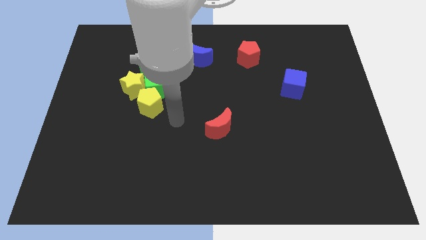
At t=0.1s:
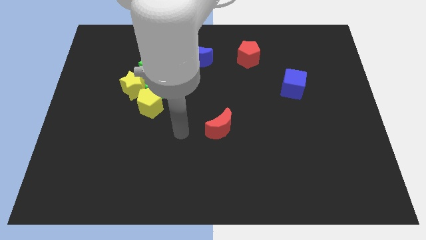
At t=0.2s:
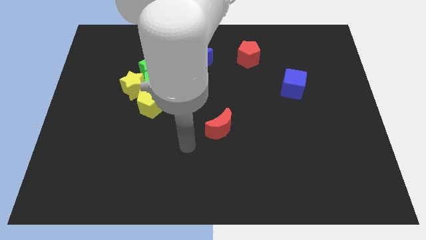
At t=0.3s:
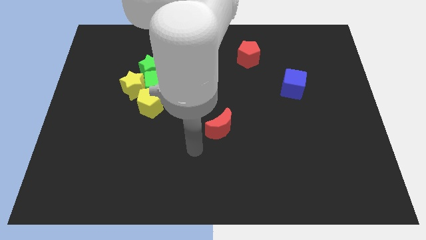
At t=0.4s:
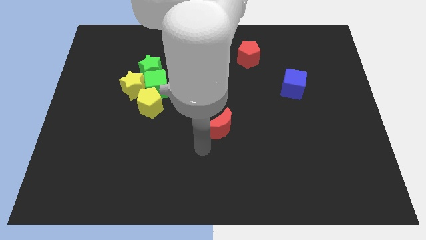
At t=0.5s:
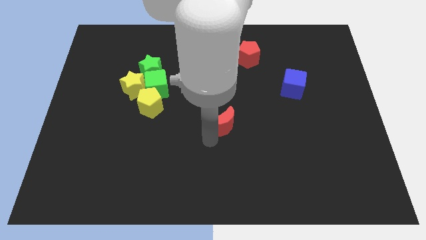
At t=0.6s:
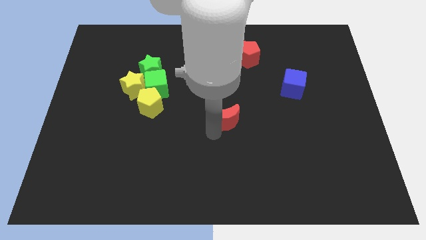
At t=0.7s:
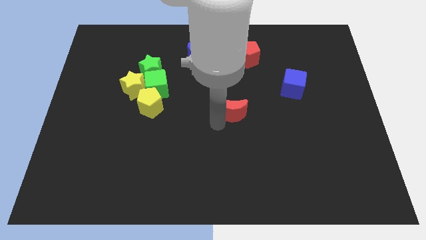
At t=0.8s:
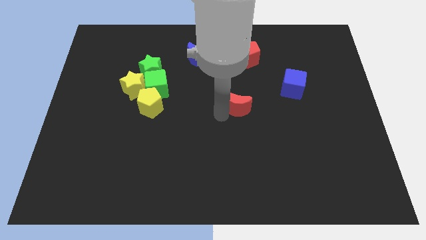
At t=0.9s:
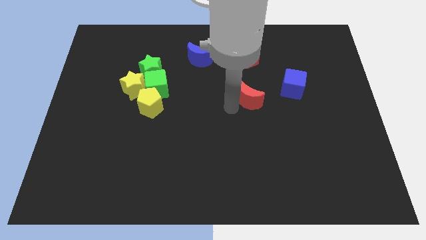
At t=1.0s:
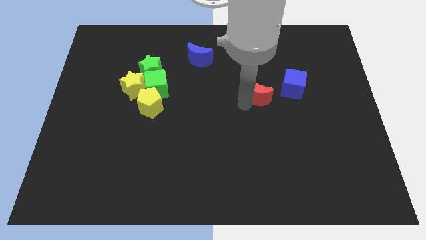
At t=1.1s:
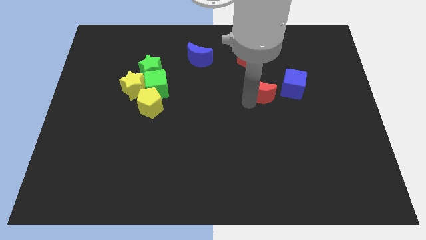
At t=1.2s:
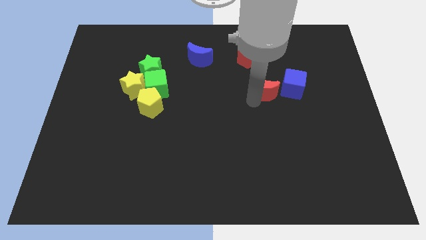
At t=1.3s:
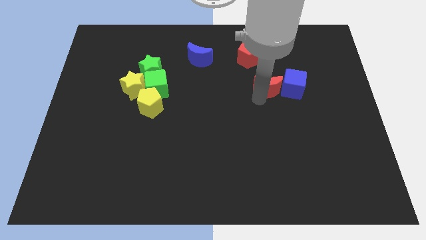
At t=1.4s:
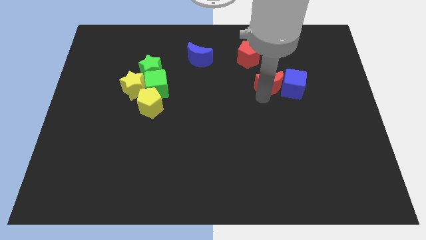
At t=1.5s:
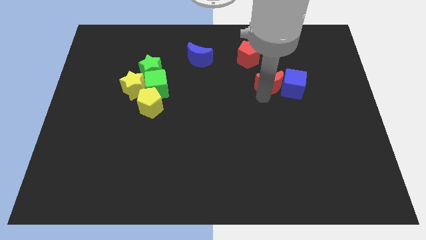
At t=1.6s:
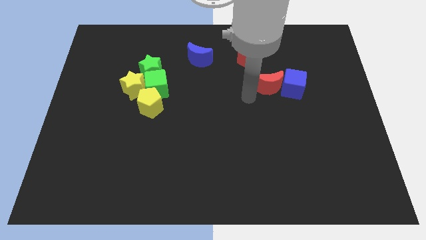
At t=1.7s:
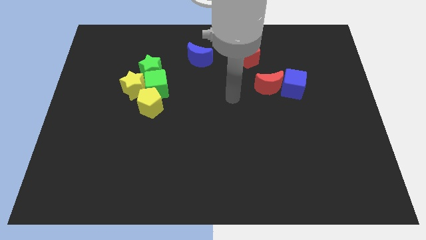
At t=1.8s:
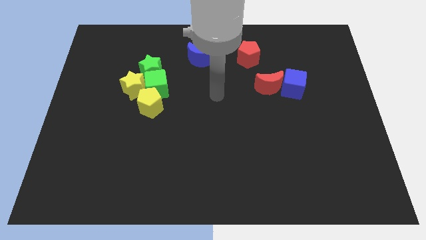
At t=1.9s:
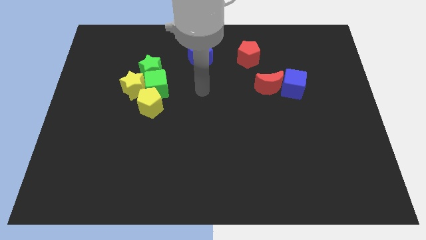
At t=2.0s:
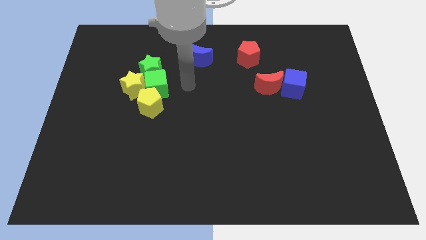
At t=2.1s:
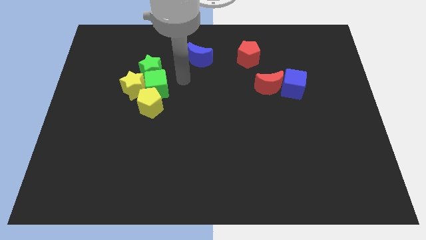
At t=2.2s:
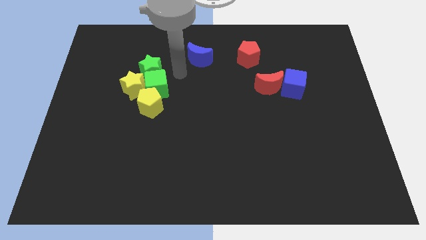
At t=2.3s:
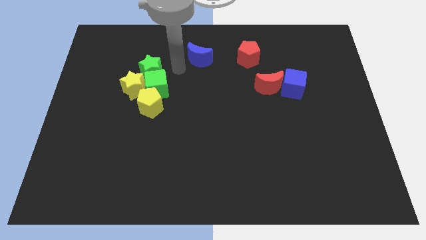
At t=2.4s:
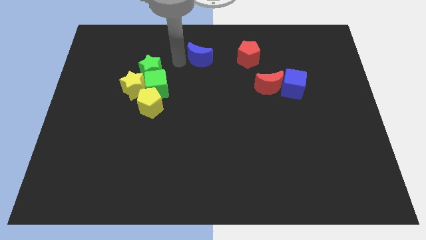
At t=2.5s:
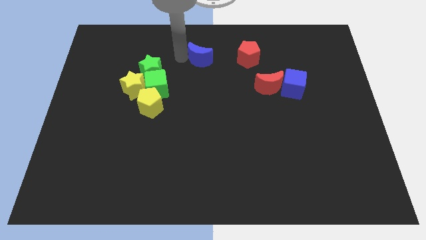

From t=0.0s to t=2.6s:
push the red crescent to the left of the blue cube

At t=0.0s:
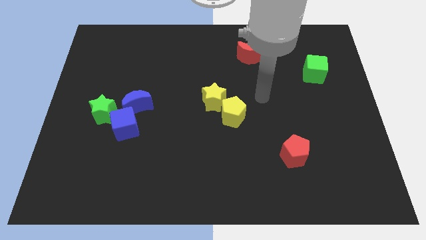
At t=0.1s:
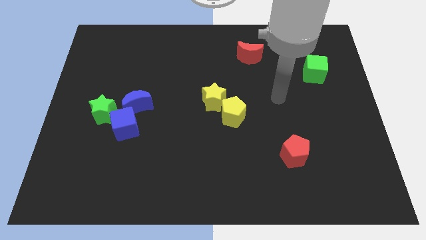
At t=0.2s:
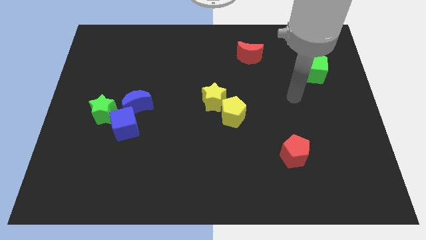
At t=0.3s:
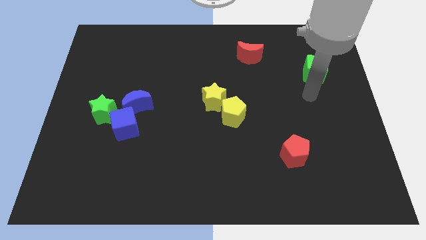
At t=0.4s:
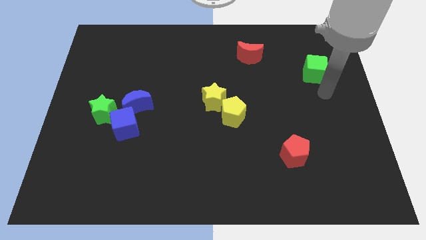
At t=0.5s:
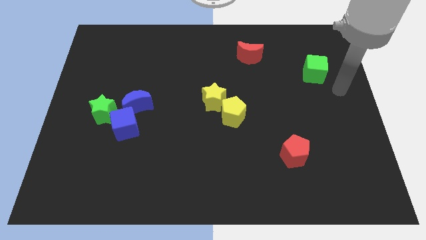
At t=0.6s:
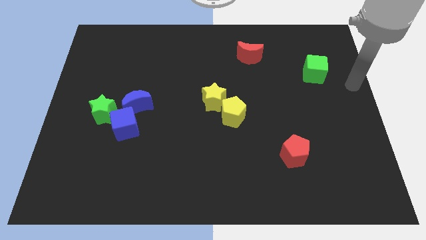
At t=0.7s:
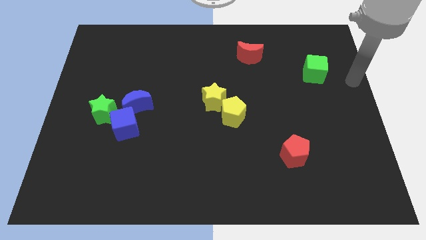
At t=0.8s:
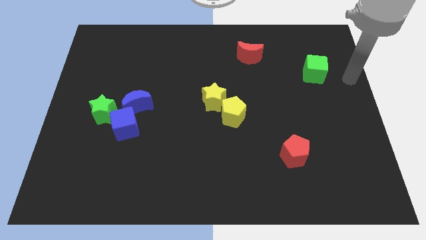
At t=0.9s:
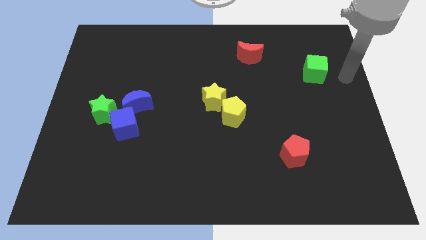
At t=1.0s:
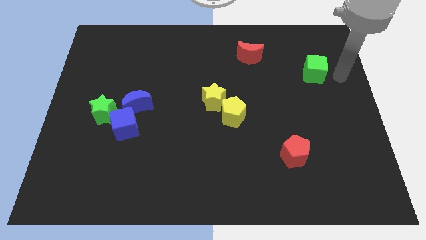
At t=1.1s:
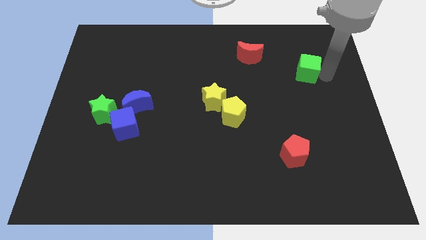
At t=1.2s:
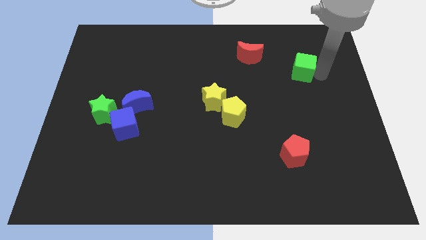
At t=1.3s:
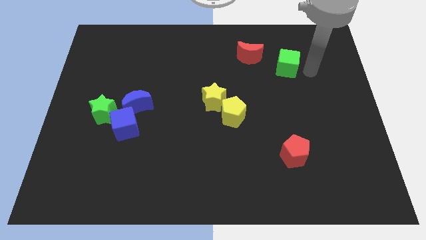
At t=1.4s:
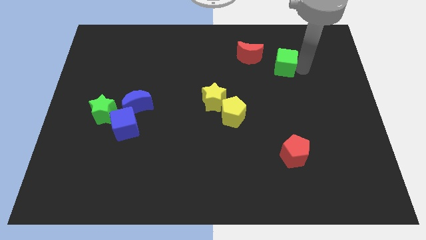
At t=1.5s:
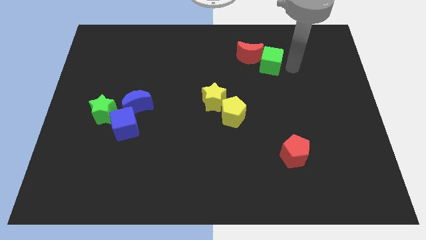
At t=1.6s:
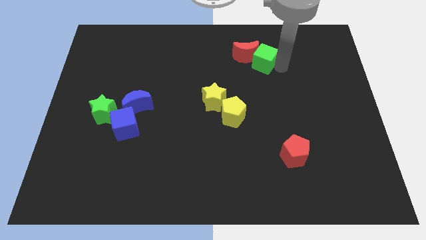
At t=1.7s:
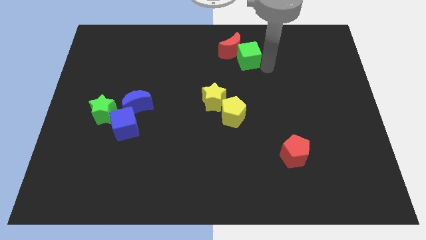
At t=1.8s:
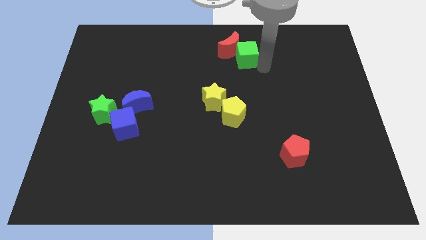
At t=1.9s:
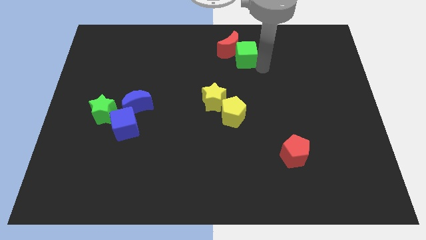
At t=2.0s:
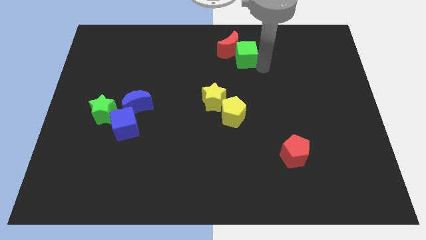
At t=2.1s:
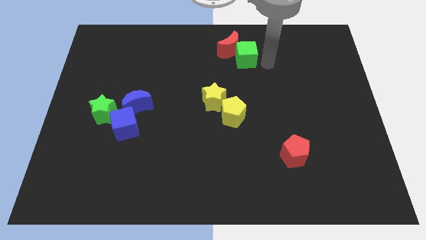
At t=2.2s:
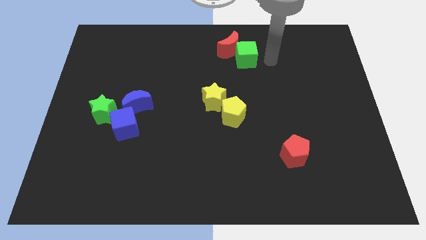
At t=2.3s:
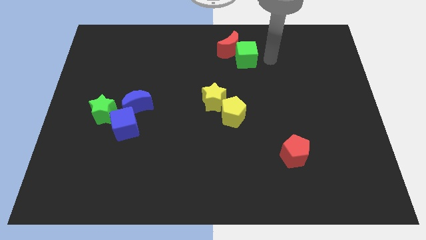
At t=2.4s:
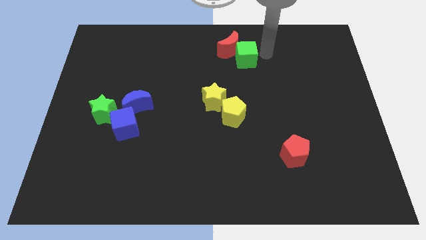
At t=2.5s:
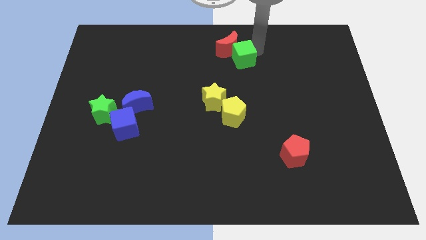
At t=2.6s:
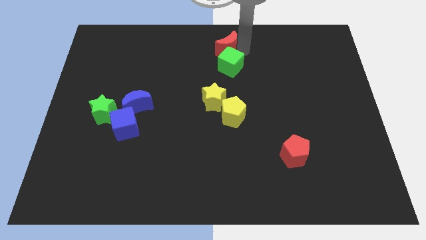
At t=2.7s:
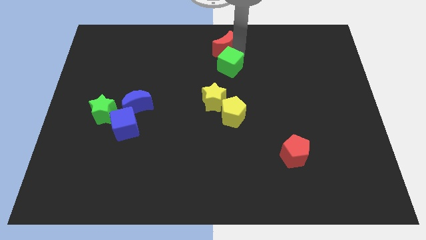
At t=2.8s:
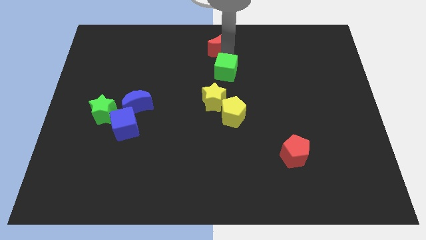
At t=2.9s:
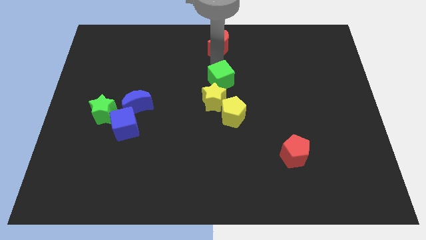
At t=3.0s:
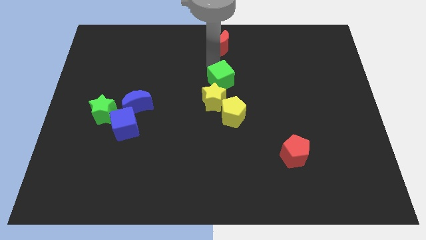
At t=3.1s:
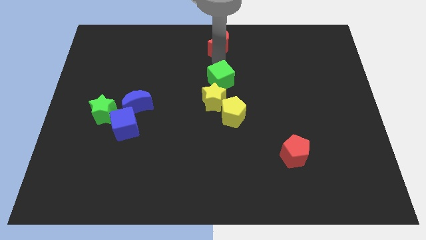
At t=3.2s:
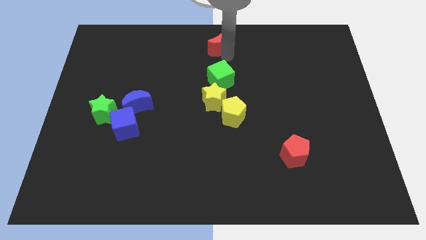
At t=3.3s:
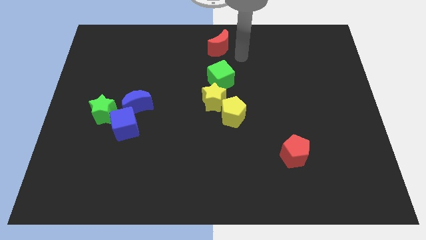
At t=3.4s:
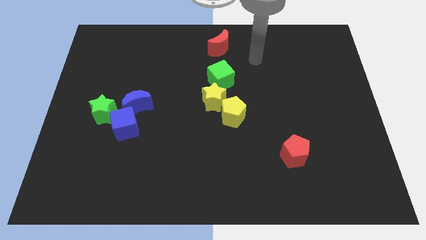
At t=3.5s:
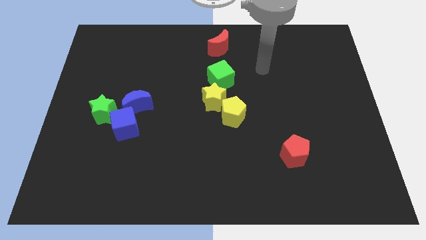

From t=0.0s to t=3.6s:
push the green cube vertically below the red moon

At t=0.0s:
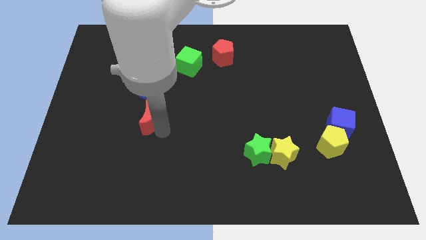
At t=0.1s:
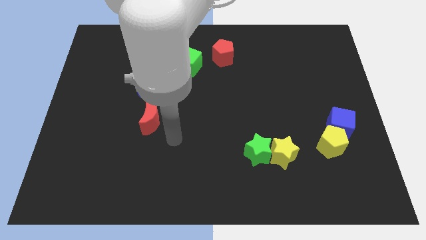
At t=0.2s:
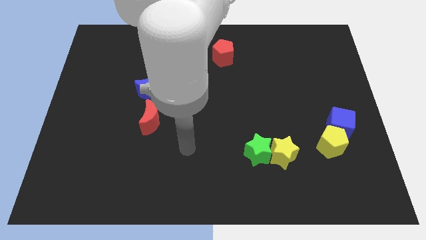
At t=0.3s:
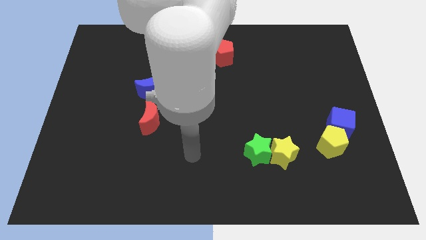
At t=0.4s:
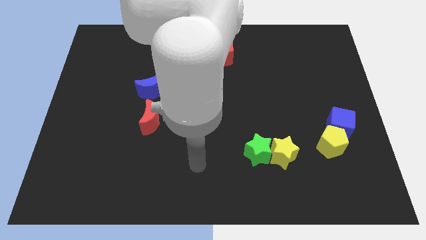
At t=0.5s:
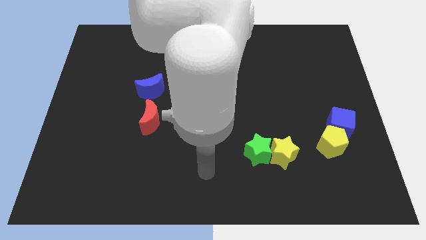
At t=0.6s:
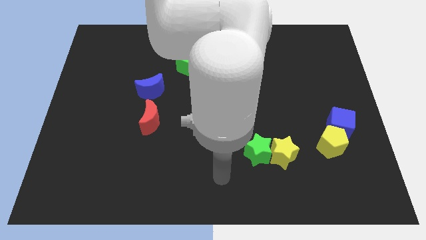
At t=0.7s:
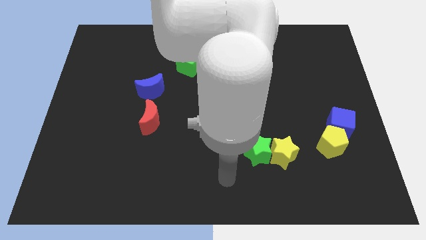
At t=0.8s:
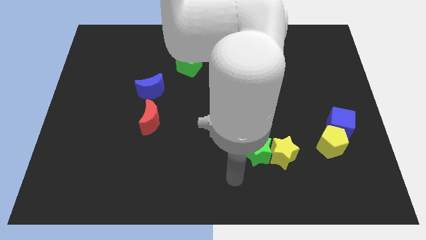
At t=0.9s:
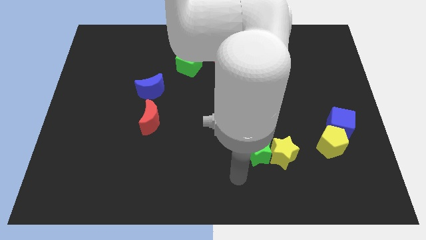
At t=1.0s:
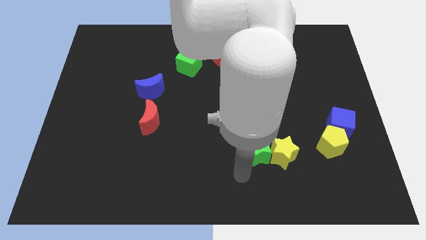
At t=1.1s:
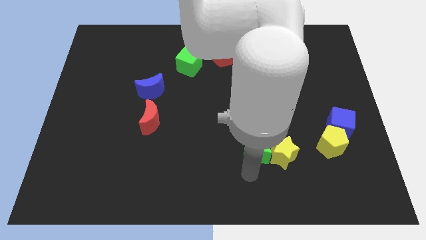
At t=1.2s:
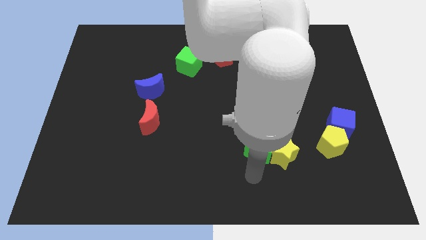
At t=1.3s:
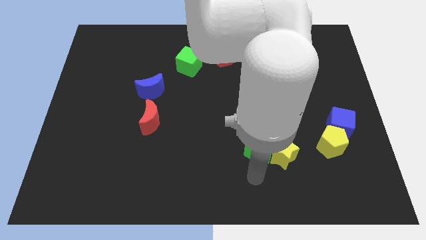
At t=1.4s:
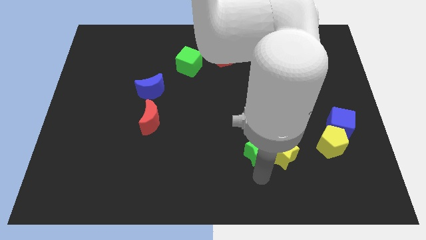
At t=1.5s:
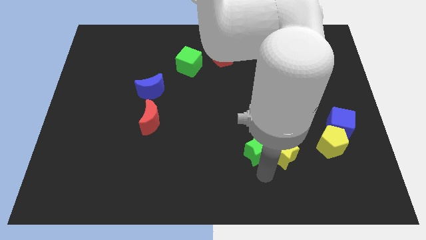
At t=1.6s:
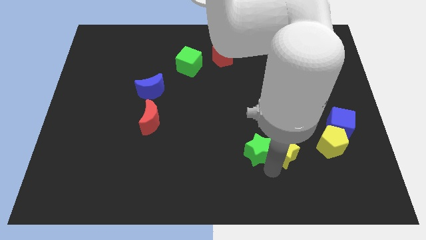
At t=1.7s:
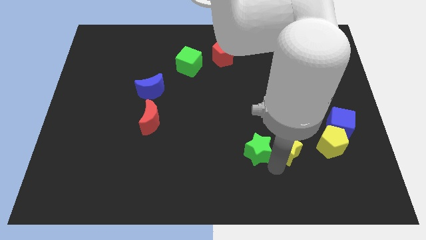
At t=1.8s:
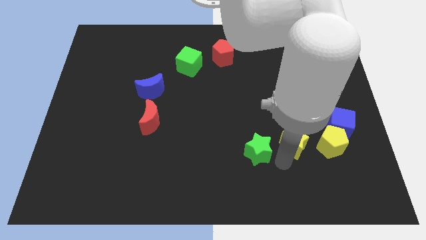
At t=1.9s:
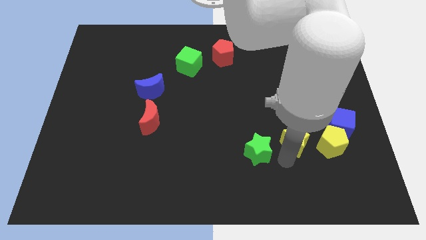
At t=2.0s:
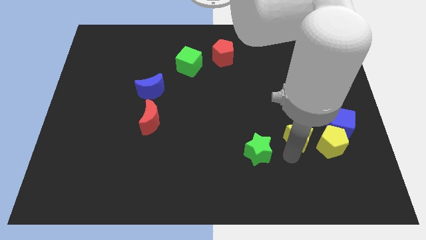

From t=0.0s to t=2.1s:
push the yellow star slightly to the top

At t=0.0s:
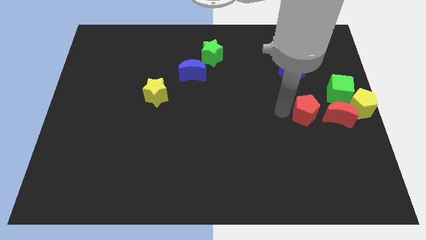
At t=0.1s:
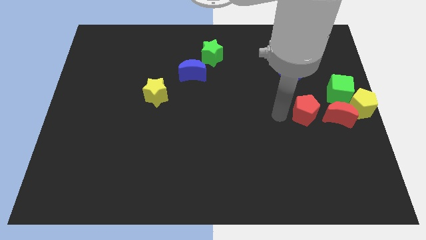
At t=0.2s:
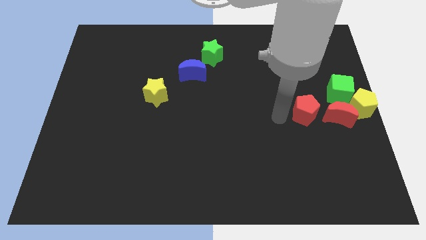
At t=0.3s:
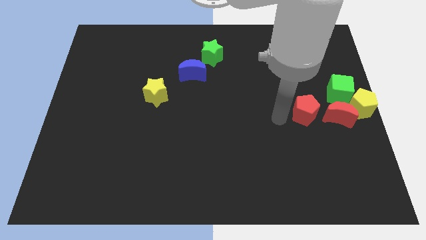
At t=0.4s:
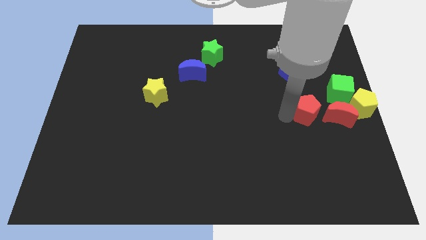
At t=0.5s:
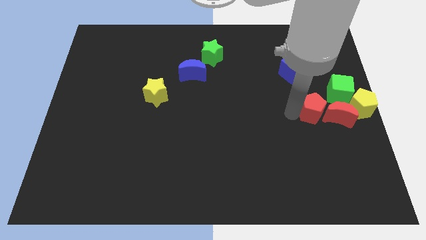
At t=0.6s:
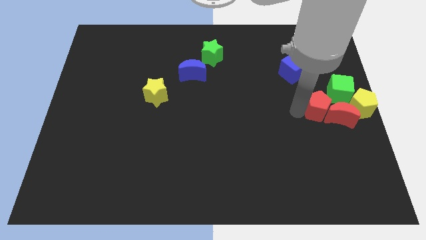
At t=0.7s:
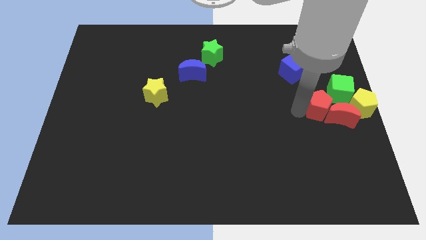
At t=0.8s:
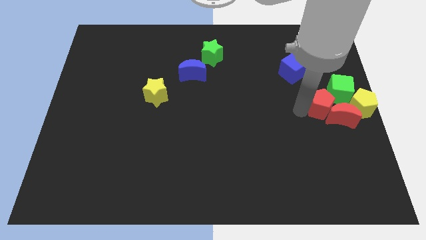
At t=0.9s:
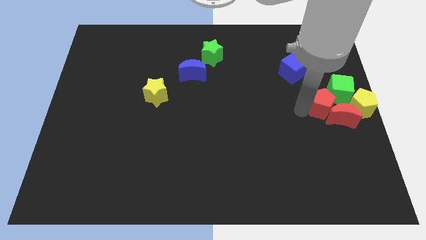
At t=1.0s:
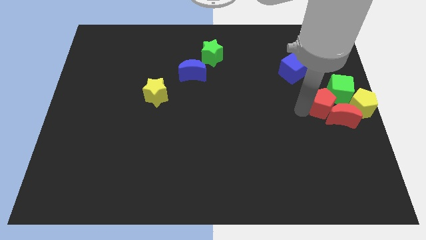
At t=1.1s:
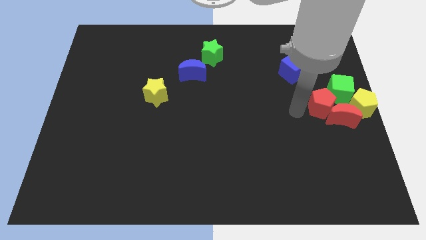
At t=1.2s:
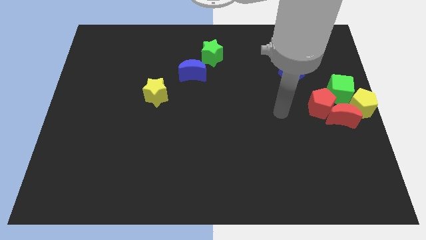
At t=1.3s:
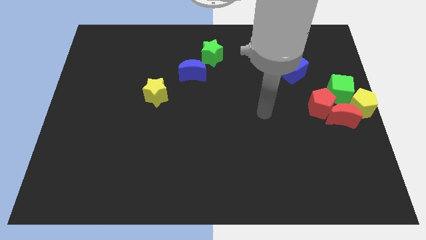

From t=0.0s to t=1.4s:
push the red pentagon into the red crescent
